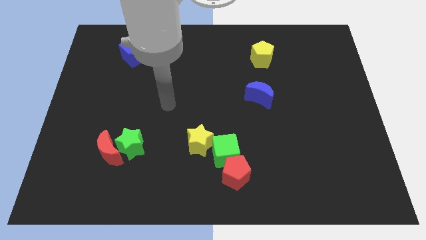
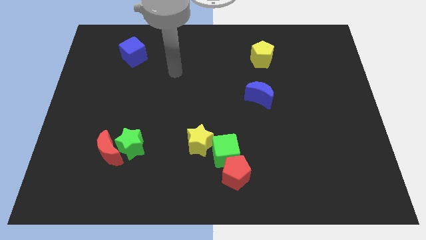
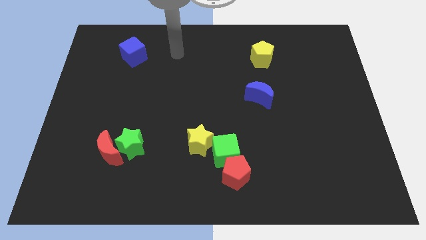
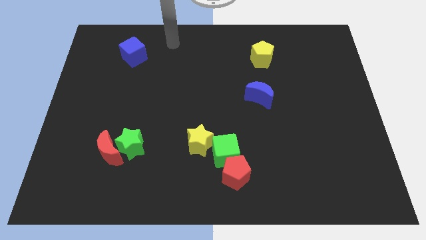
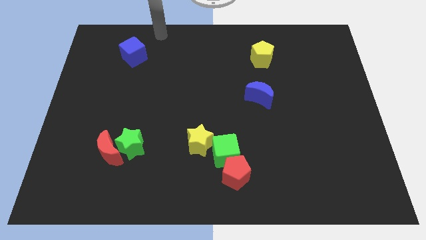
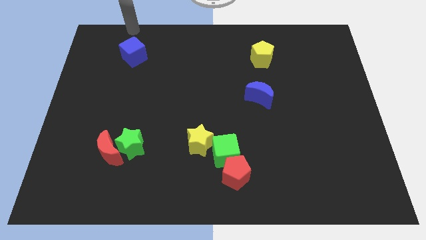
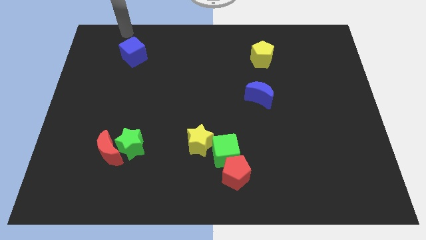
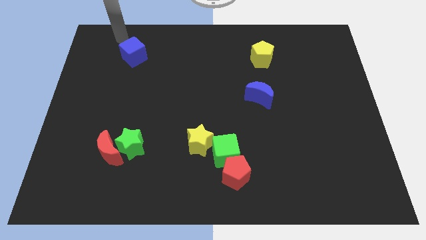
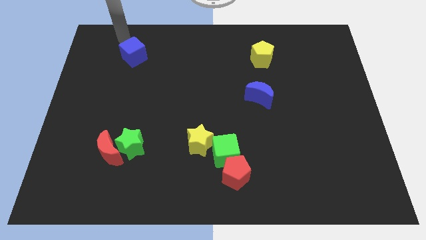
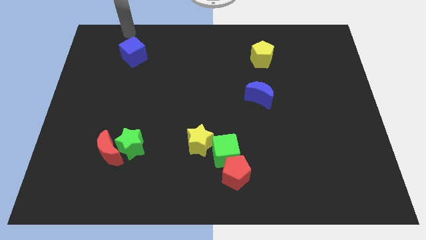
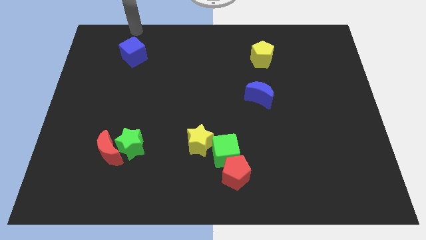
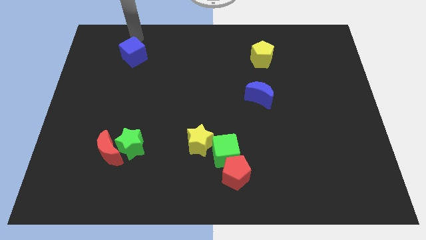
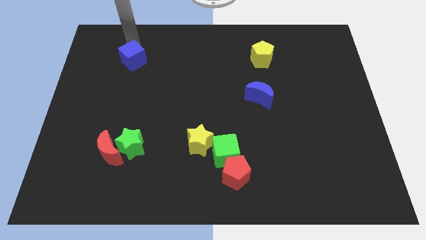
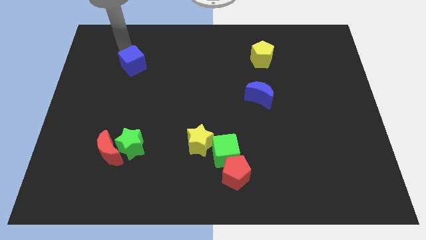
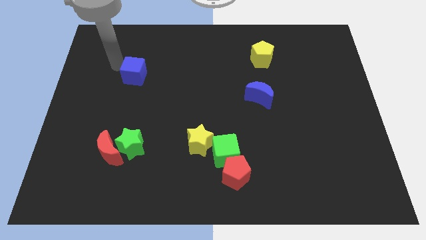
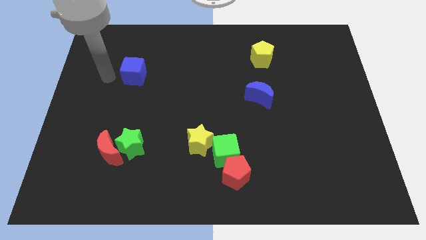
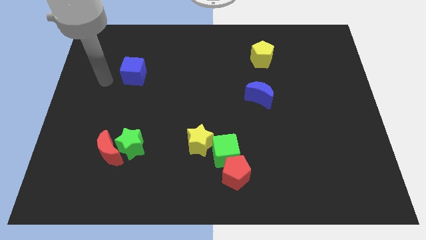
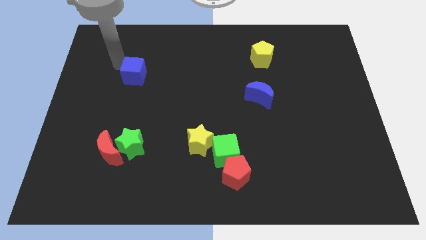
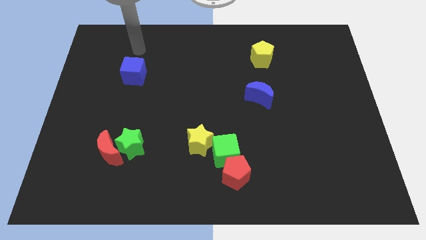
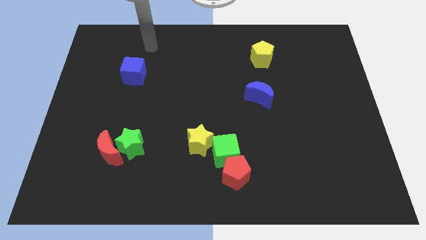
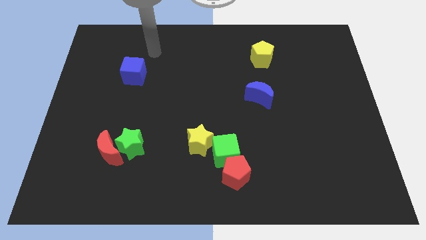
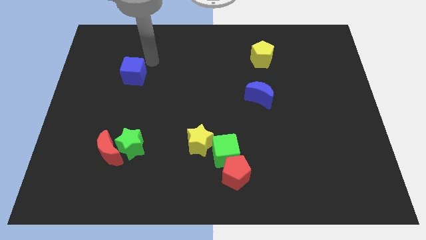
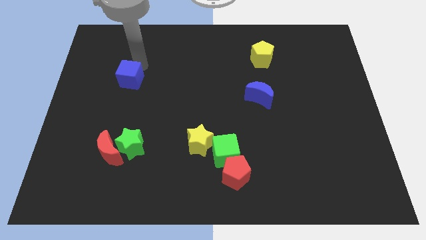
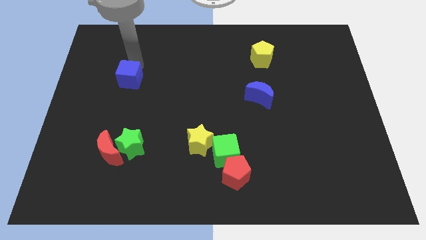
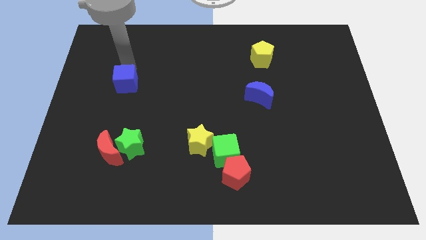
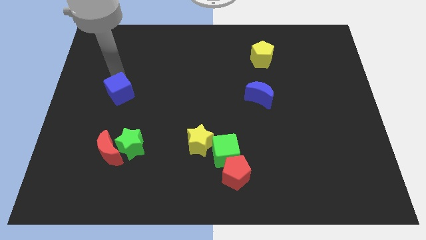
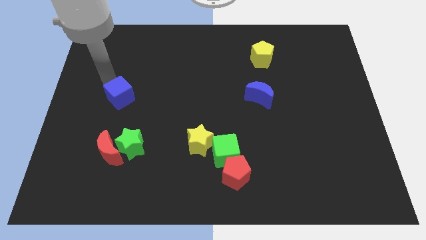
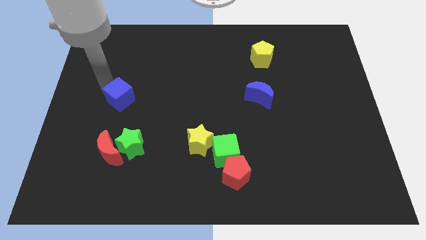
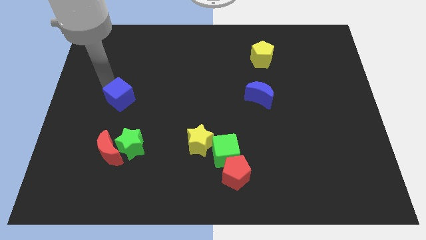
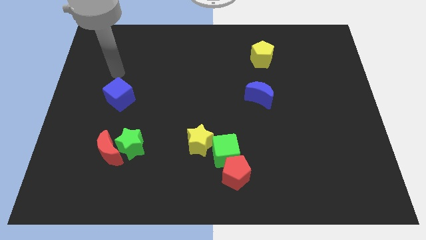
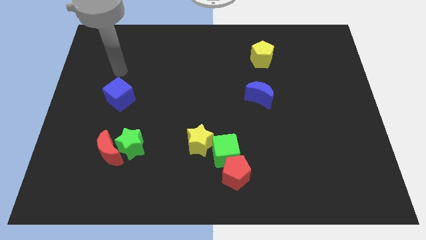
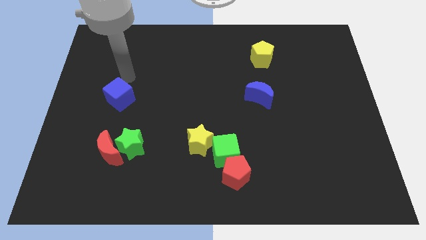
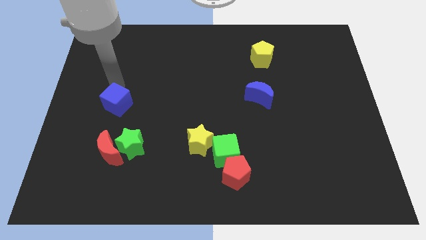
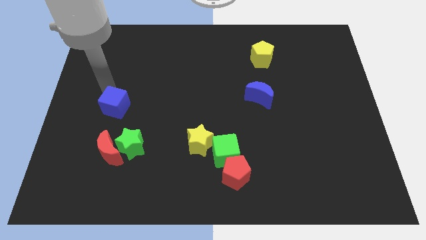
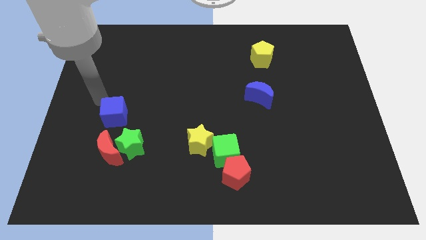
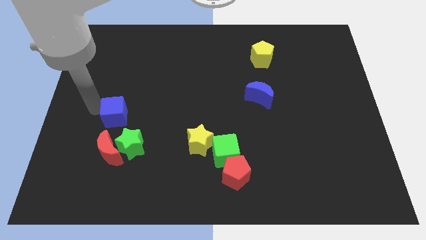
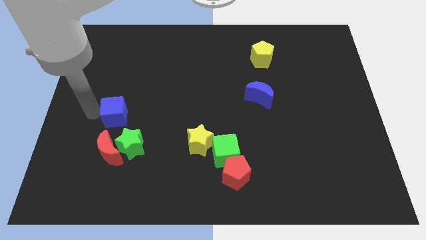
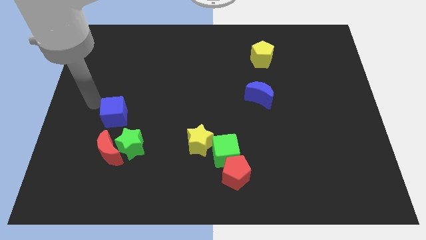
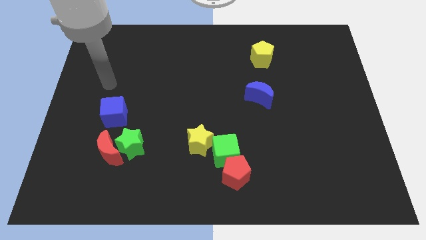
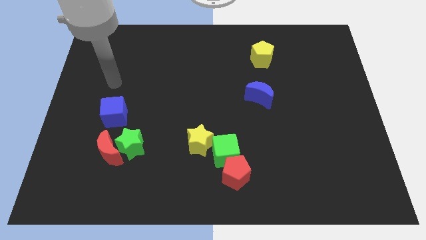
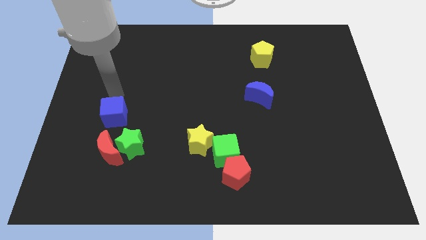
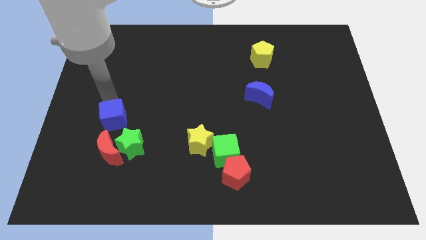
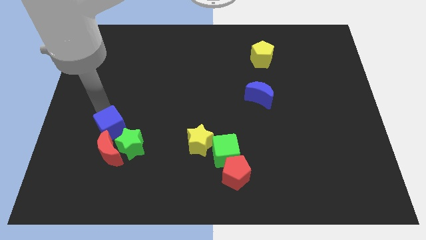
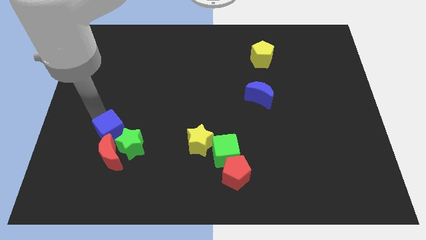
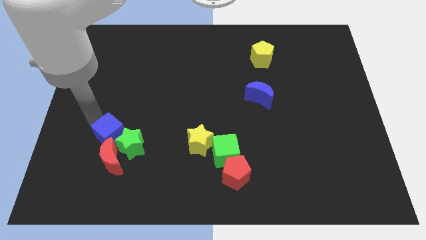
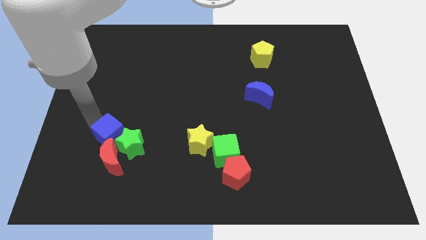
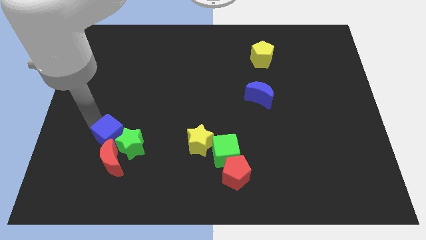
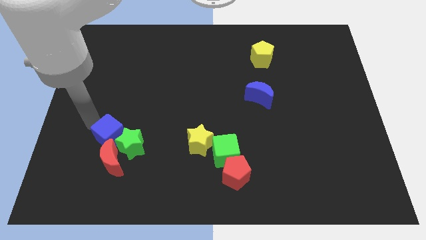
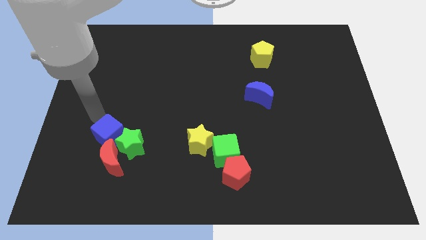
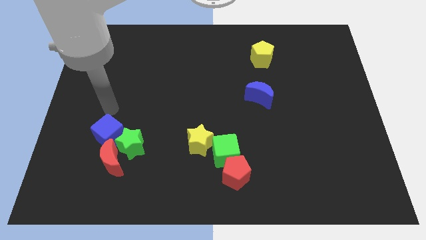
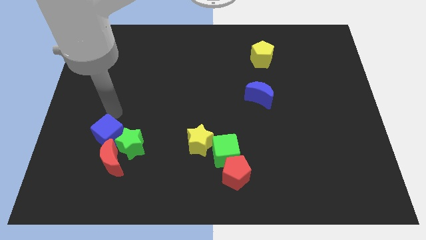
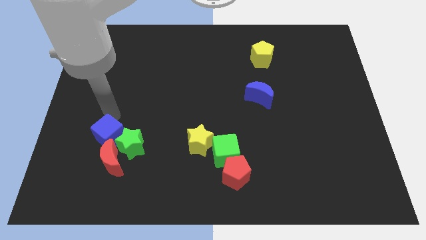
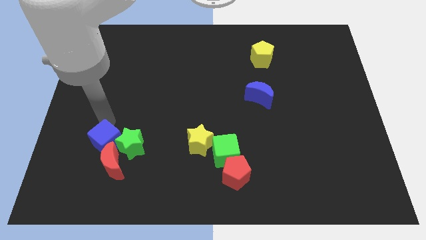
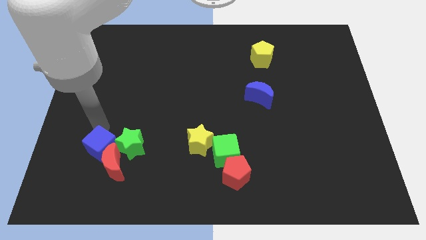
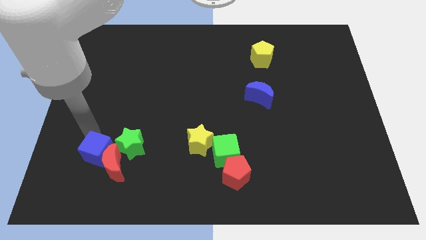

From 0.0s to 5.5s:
put the blue cube next to the red moon

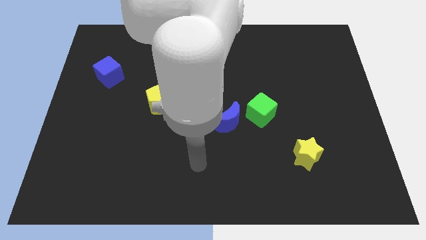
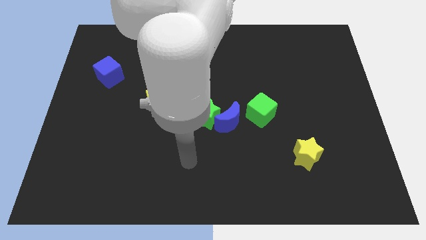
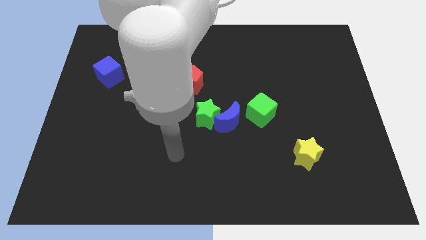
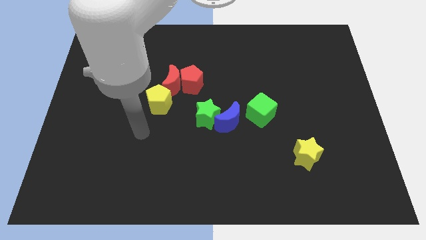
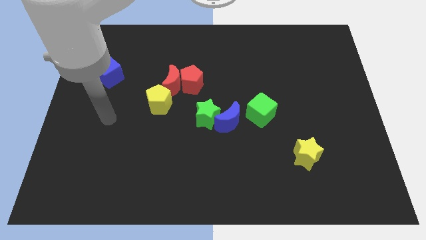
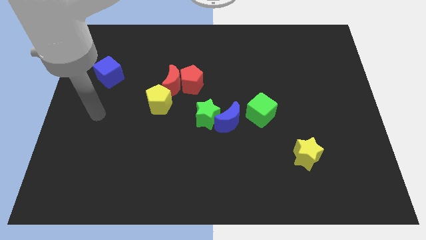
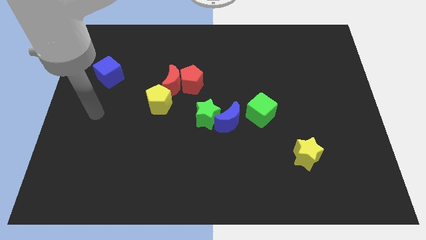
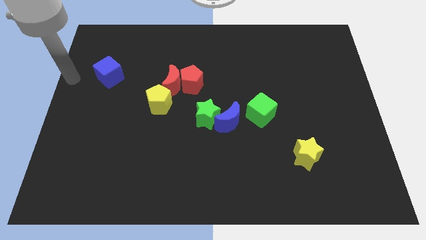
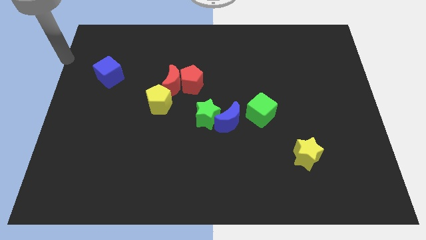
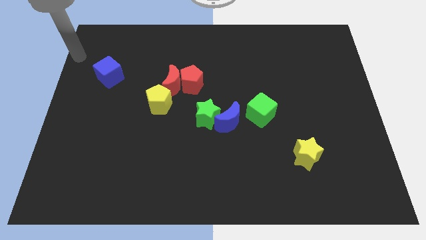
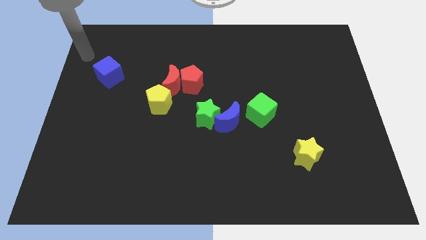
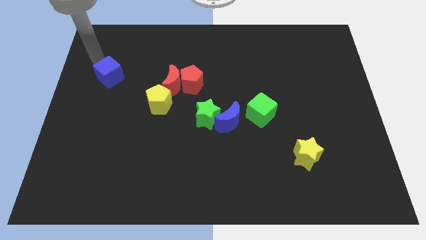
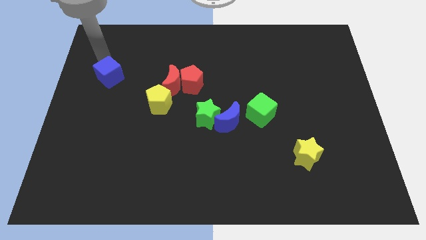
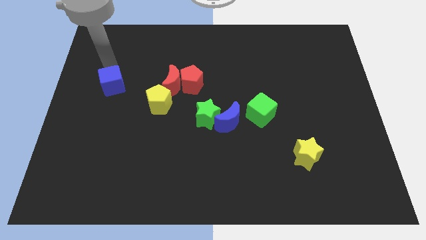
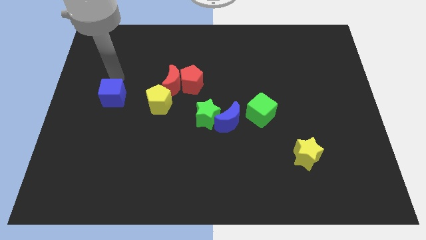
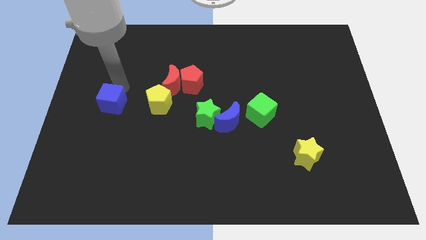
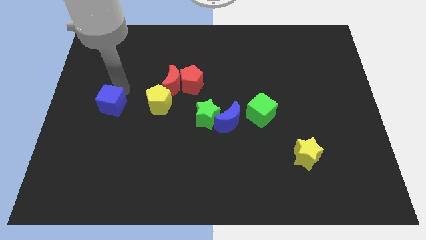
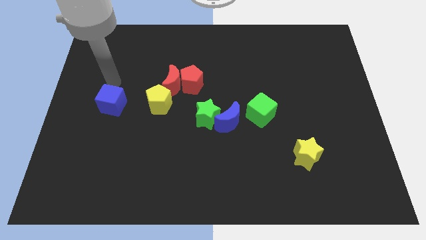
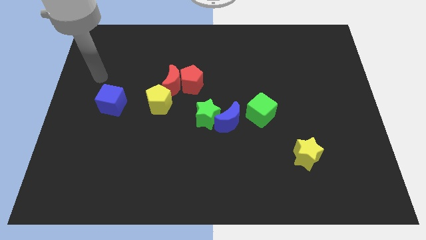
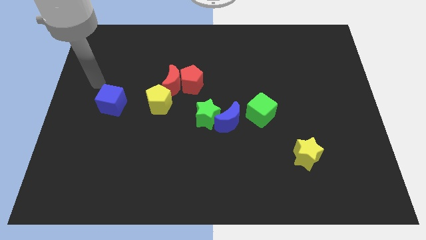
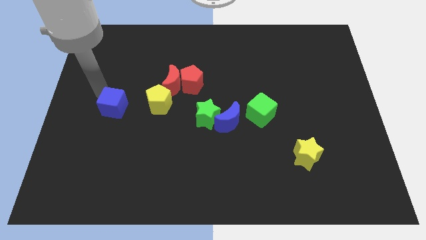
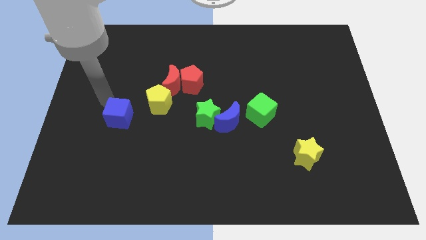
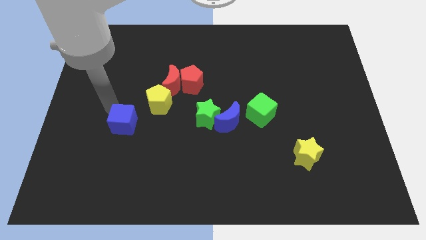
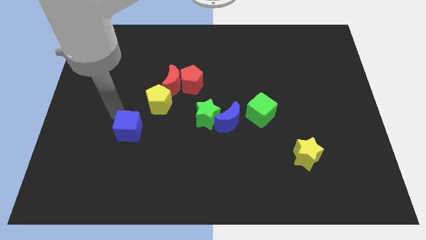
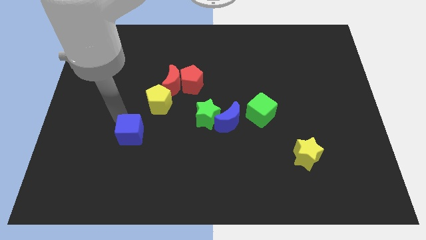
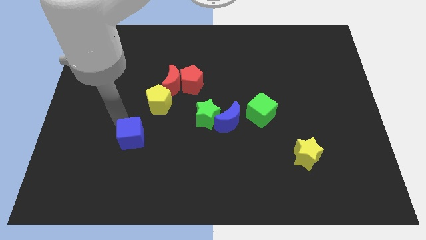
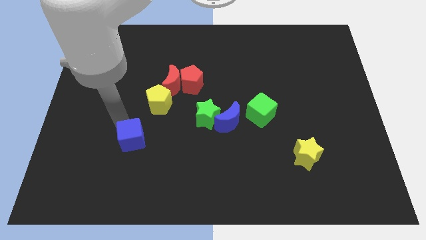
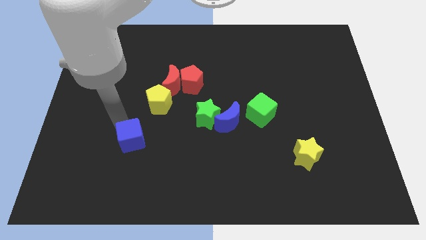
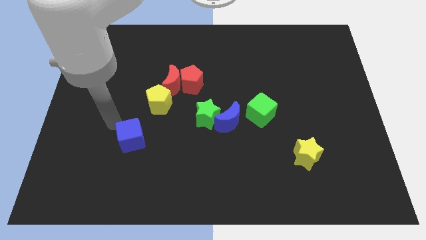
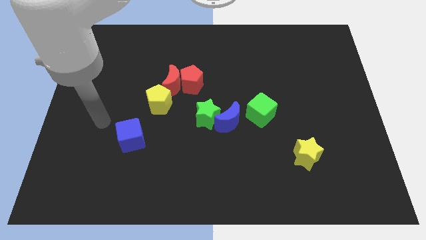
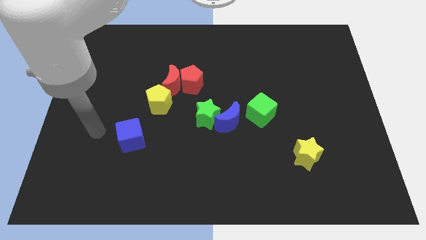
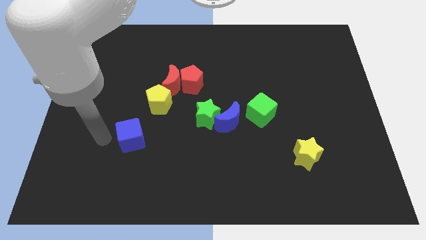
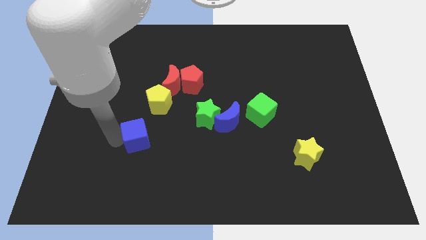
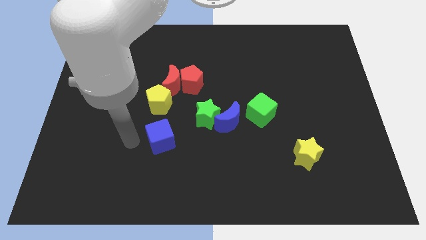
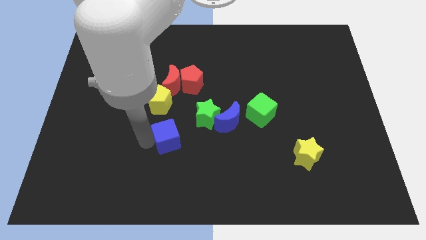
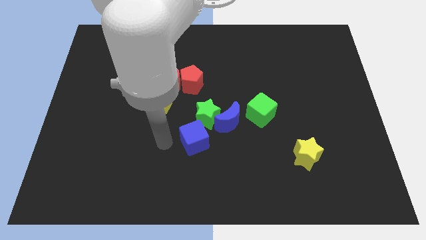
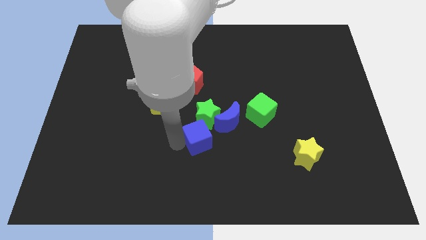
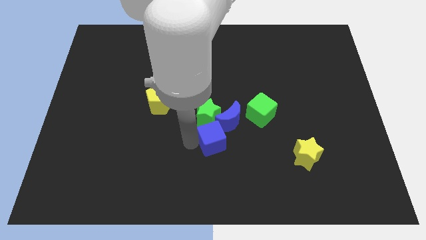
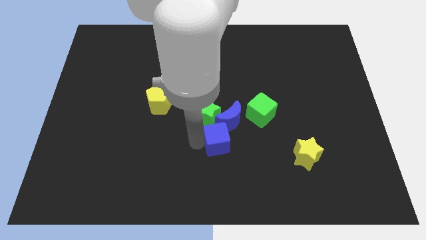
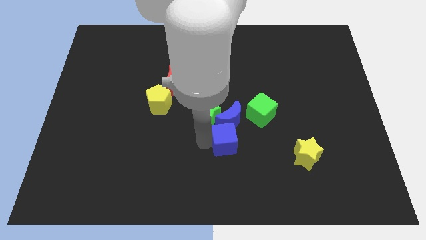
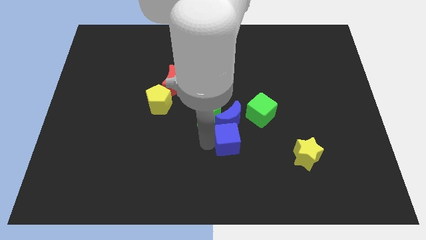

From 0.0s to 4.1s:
move the blue cube towards the blue moon
